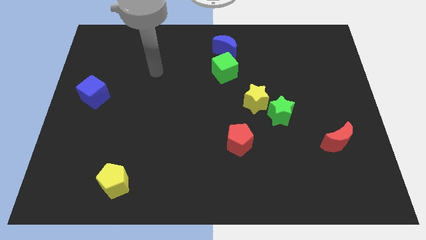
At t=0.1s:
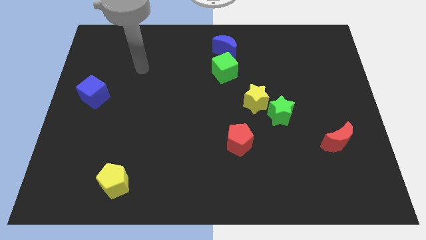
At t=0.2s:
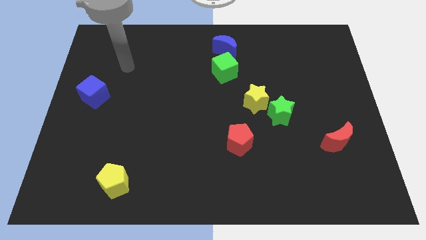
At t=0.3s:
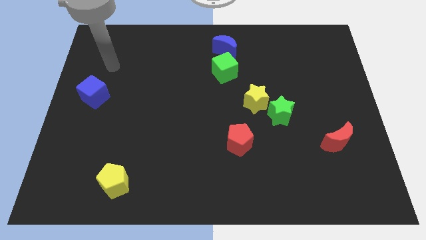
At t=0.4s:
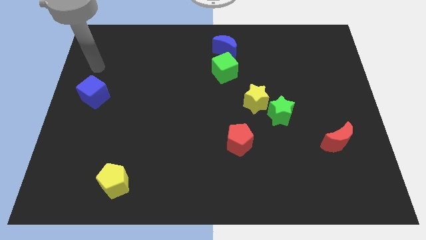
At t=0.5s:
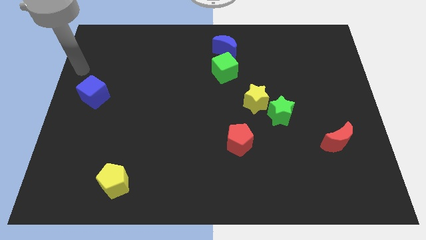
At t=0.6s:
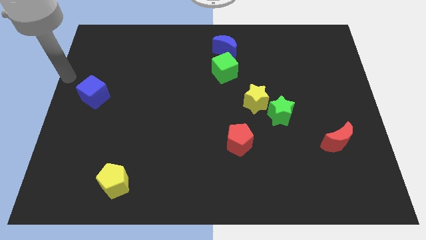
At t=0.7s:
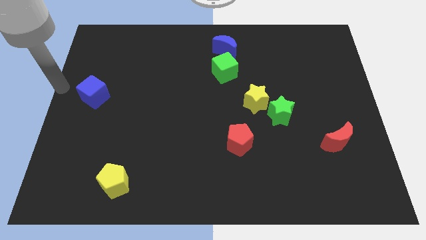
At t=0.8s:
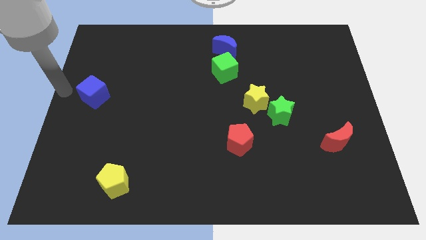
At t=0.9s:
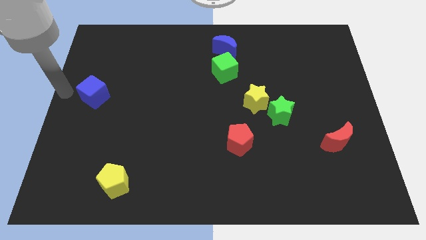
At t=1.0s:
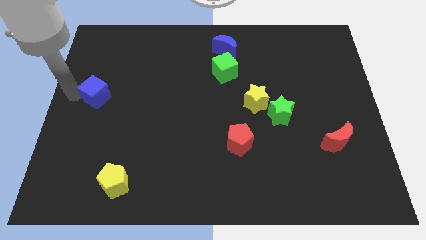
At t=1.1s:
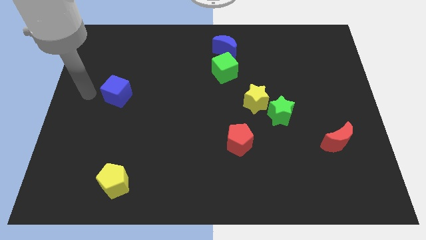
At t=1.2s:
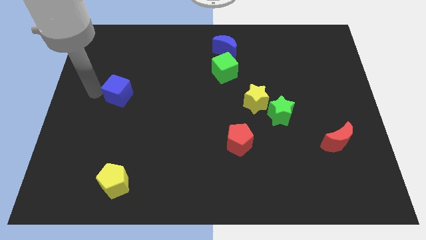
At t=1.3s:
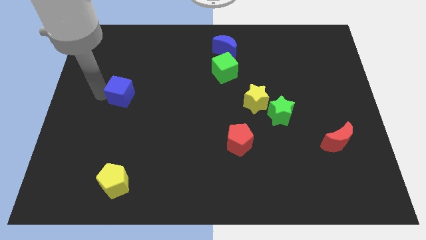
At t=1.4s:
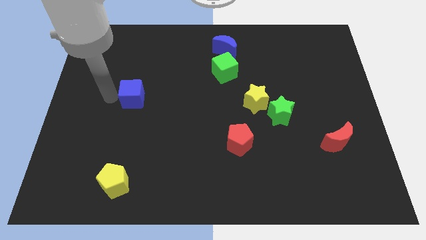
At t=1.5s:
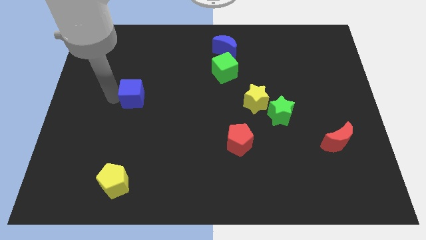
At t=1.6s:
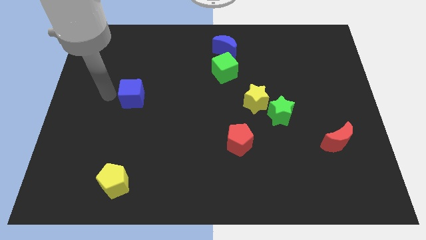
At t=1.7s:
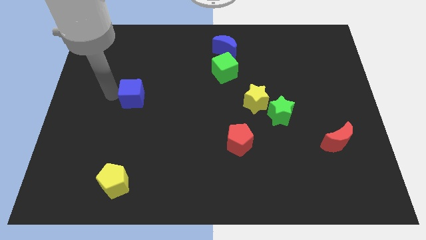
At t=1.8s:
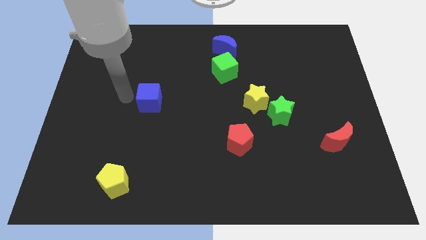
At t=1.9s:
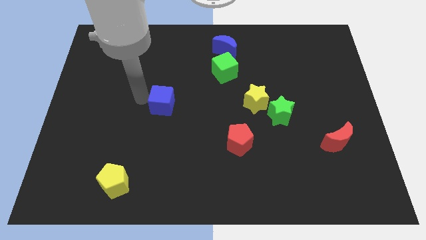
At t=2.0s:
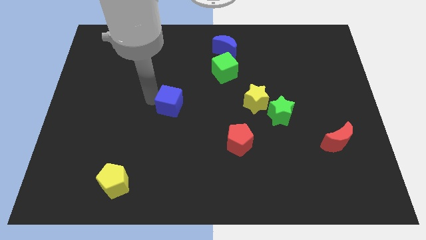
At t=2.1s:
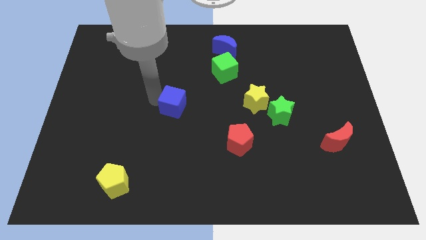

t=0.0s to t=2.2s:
push the blue cube to the right side of the table

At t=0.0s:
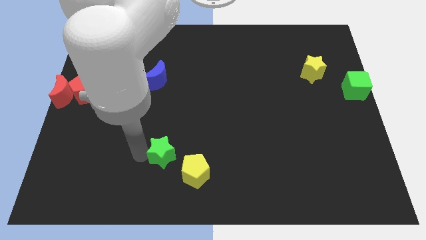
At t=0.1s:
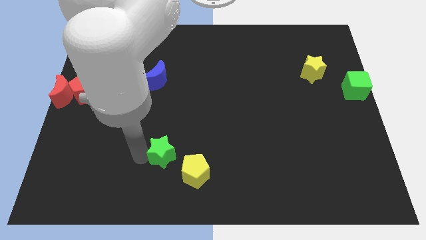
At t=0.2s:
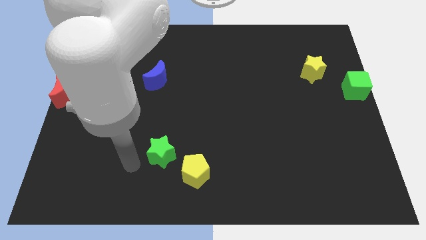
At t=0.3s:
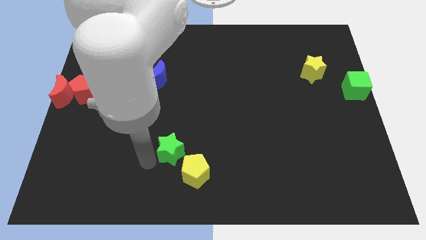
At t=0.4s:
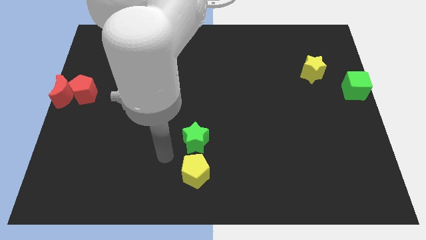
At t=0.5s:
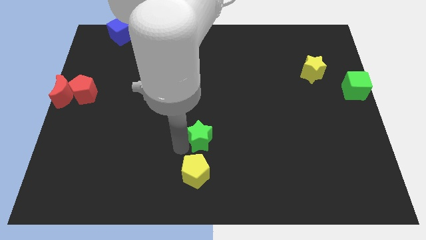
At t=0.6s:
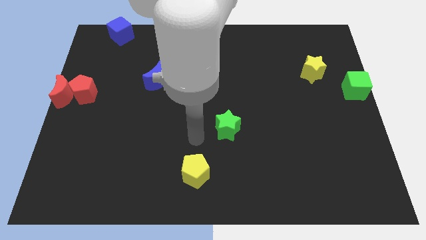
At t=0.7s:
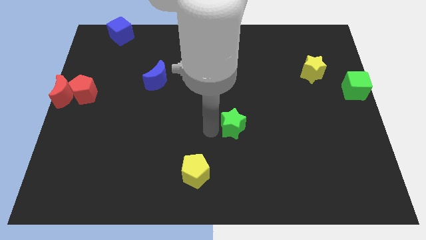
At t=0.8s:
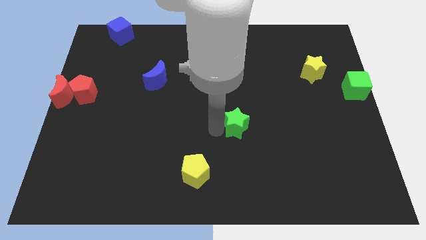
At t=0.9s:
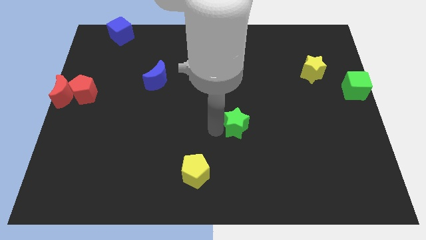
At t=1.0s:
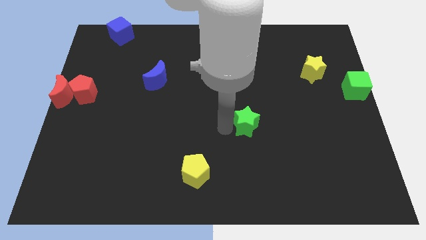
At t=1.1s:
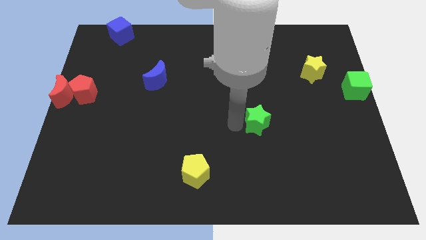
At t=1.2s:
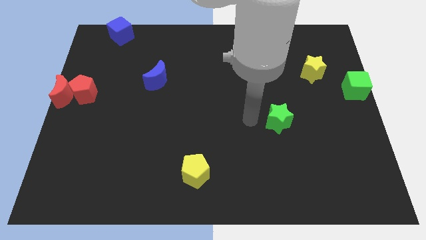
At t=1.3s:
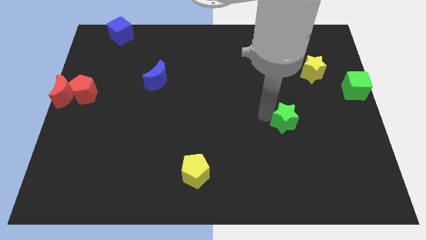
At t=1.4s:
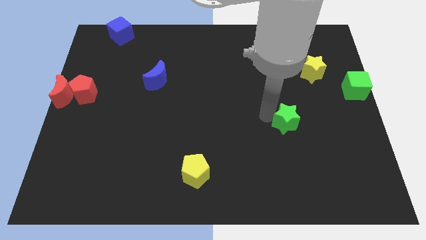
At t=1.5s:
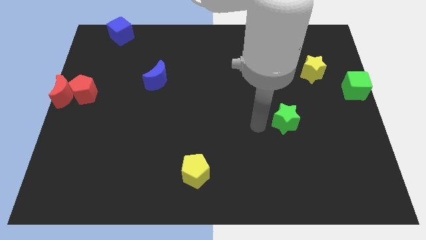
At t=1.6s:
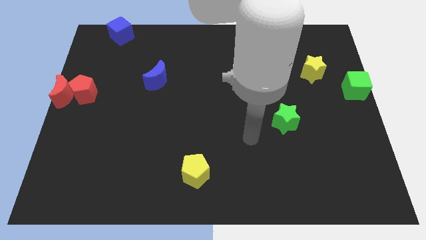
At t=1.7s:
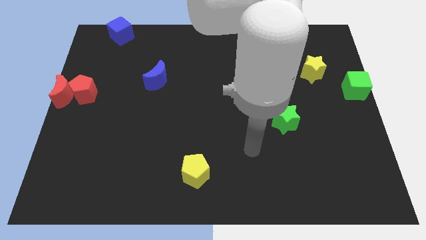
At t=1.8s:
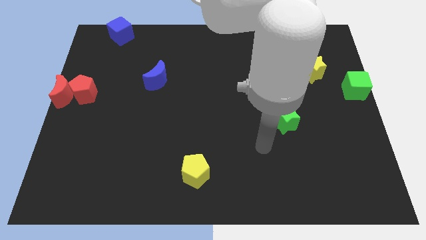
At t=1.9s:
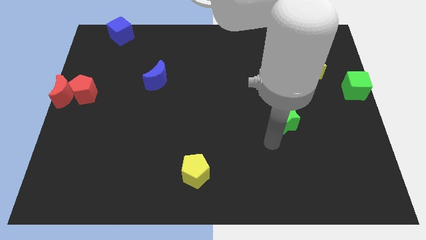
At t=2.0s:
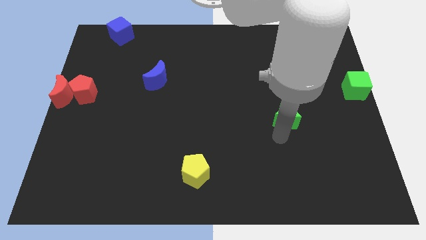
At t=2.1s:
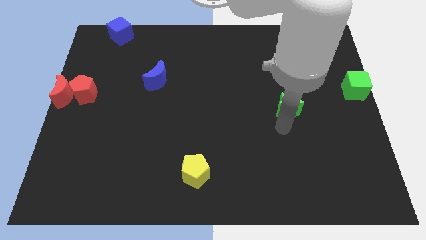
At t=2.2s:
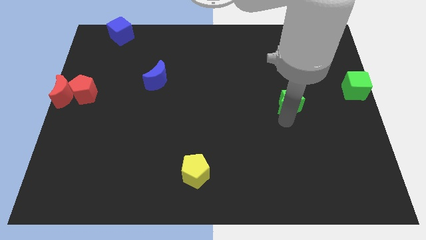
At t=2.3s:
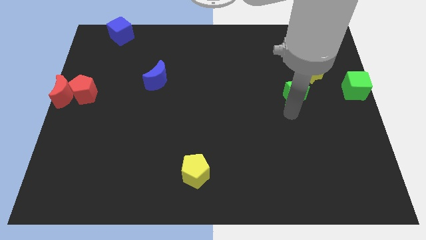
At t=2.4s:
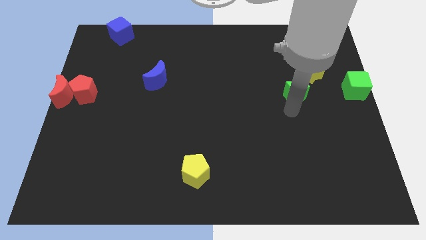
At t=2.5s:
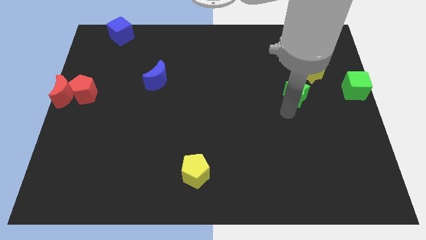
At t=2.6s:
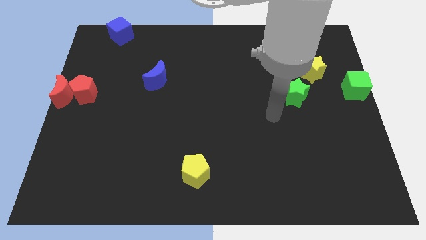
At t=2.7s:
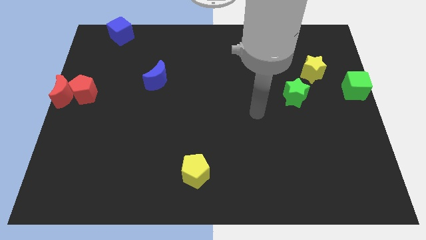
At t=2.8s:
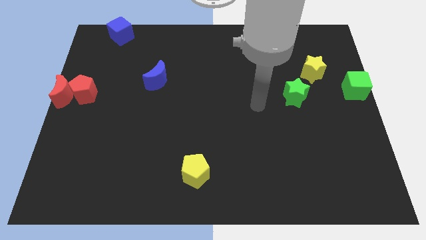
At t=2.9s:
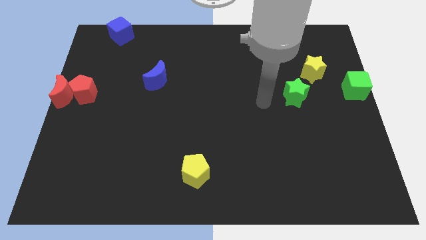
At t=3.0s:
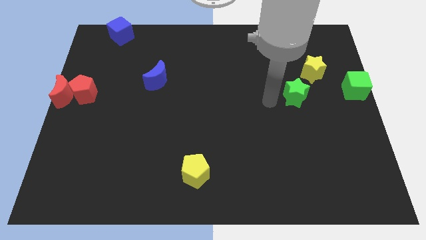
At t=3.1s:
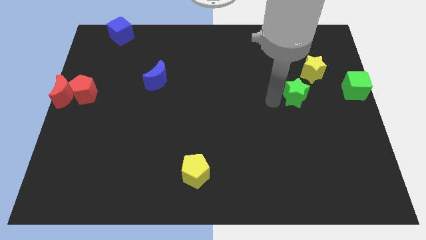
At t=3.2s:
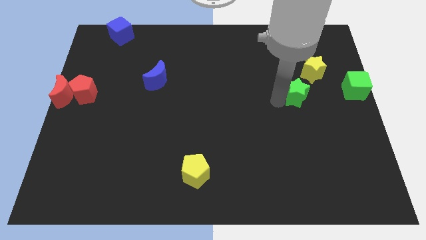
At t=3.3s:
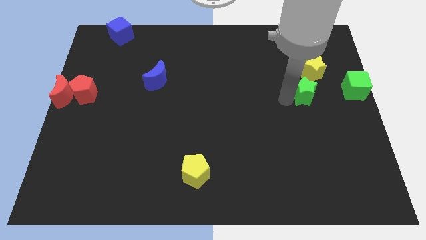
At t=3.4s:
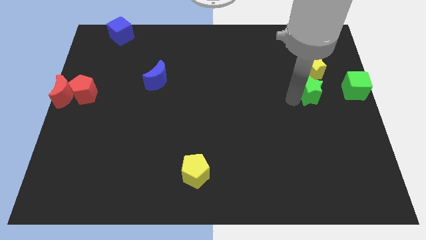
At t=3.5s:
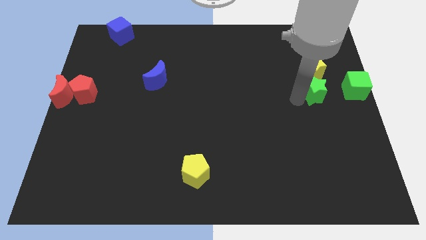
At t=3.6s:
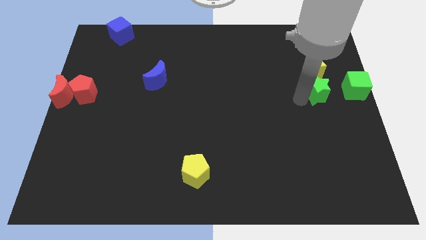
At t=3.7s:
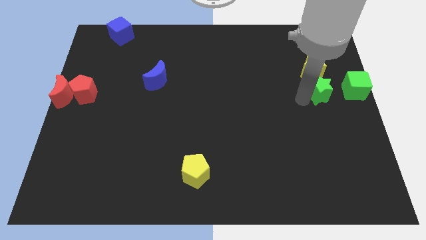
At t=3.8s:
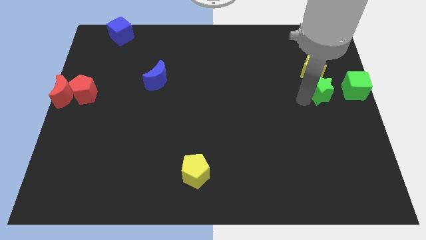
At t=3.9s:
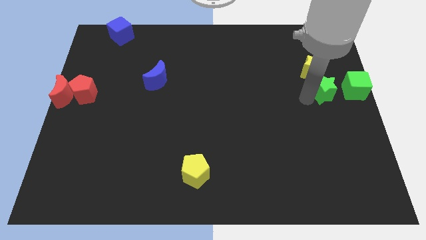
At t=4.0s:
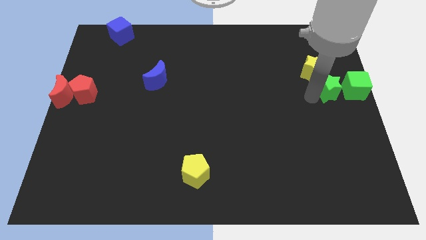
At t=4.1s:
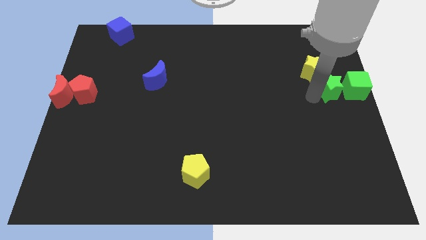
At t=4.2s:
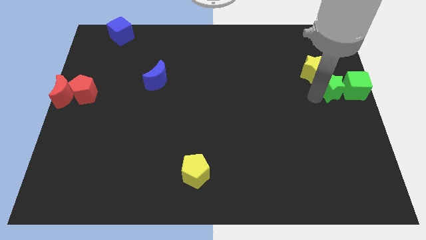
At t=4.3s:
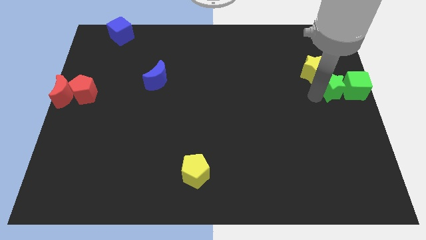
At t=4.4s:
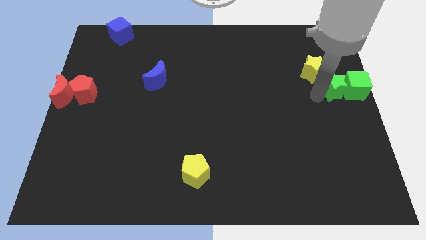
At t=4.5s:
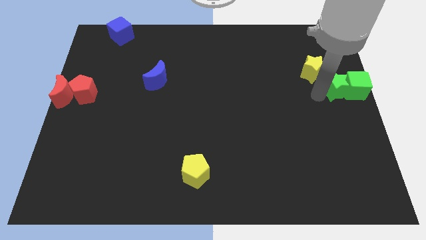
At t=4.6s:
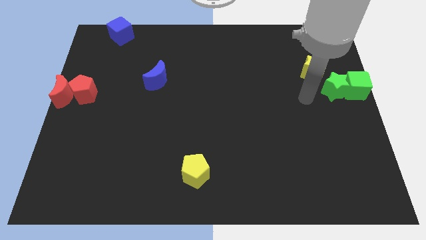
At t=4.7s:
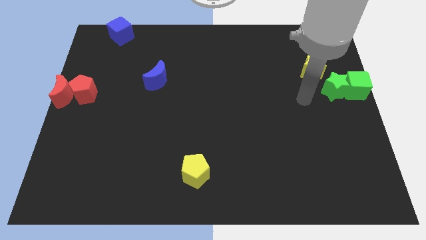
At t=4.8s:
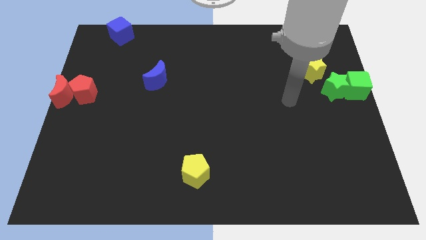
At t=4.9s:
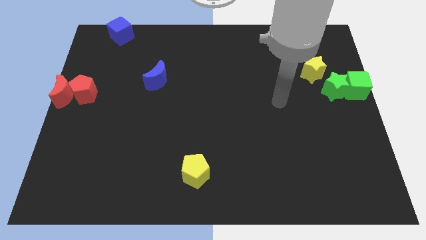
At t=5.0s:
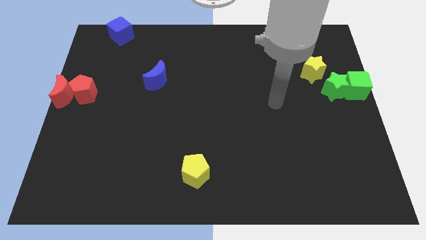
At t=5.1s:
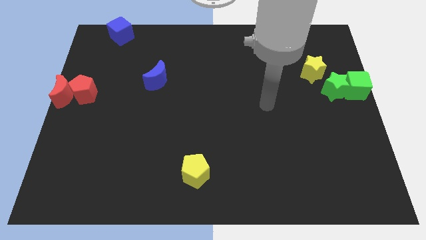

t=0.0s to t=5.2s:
push the green star and place it next to the green cube

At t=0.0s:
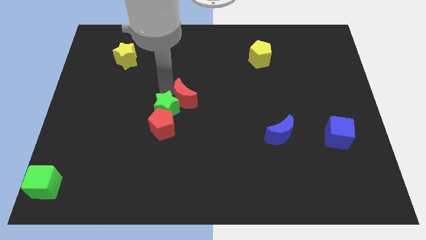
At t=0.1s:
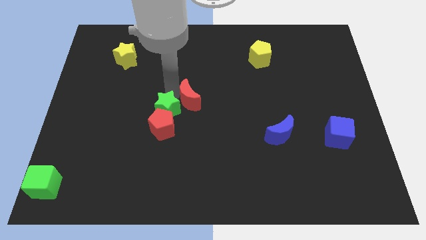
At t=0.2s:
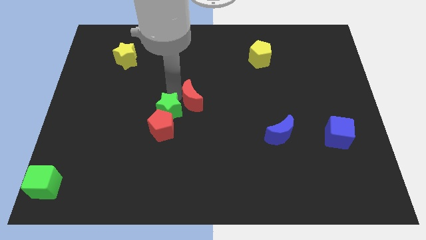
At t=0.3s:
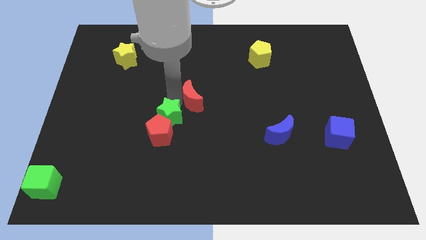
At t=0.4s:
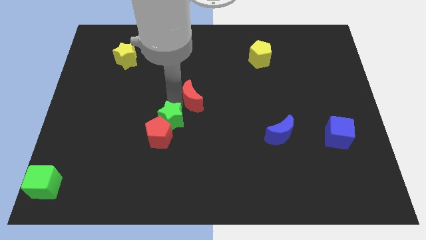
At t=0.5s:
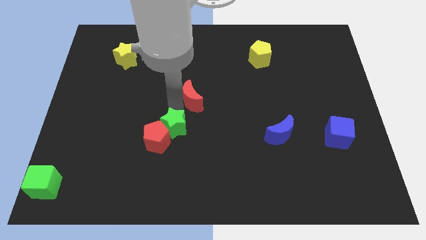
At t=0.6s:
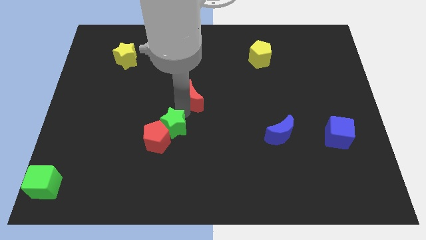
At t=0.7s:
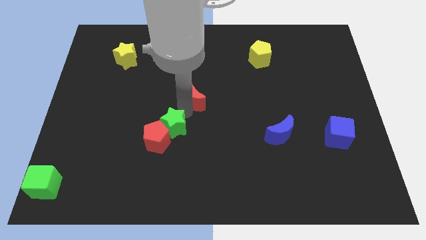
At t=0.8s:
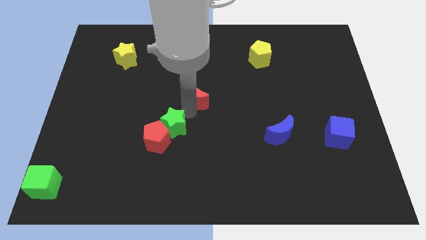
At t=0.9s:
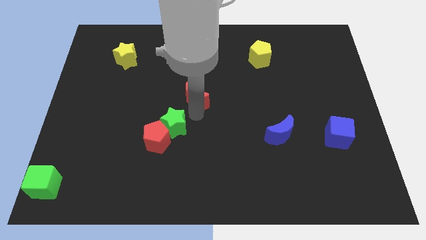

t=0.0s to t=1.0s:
move green star slightly to the top right of the red pentagon

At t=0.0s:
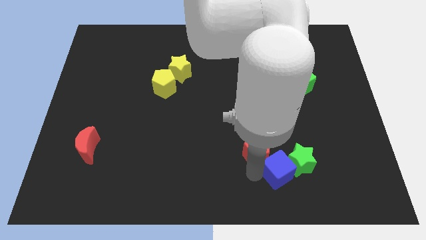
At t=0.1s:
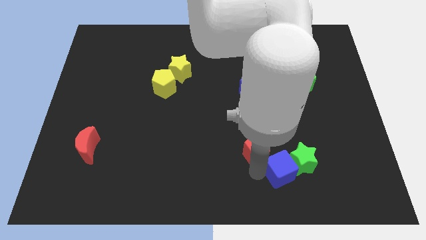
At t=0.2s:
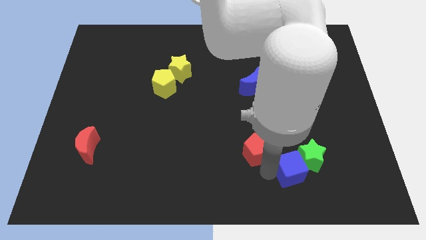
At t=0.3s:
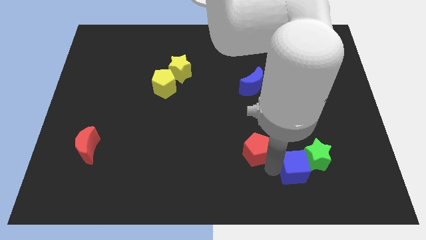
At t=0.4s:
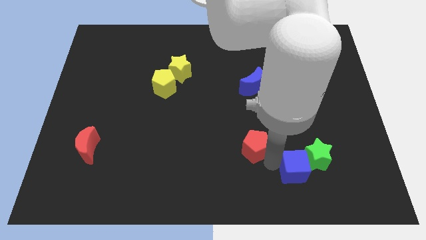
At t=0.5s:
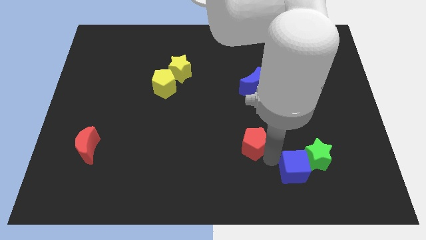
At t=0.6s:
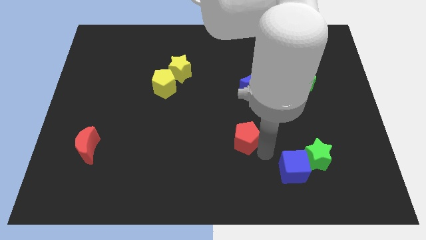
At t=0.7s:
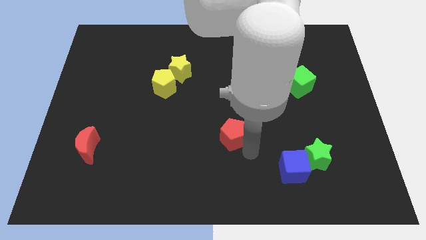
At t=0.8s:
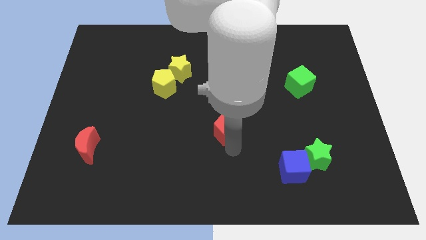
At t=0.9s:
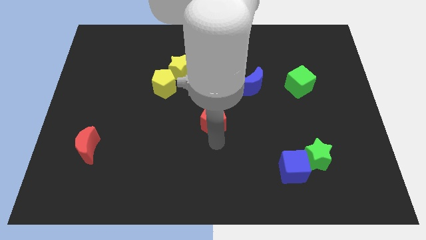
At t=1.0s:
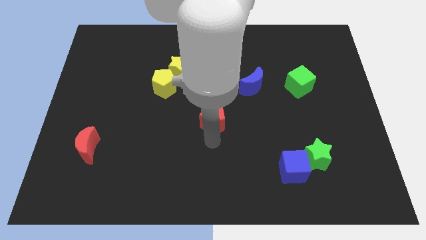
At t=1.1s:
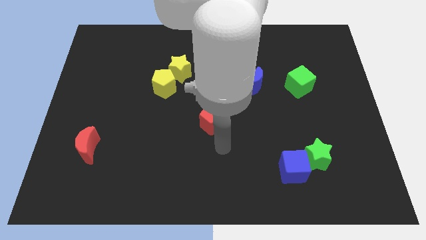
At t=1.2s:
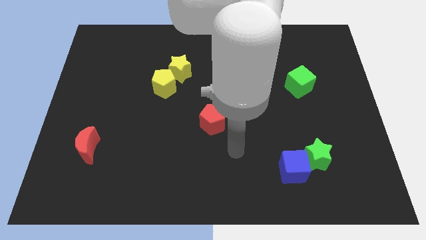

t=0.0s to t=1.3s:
place red pentagon to the center of the board
